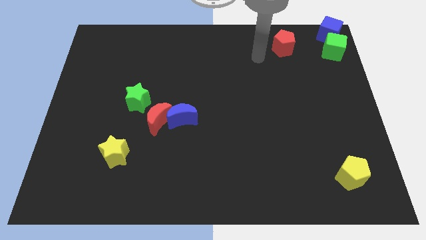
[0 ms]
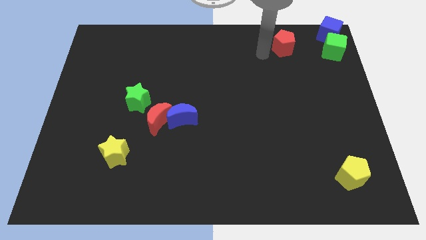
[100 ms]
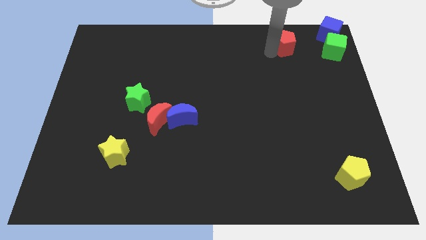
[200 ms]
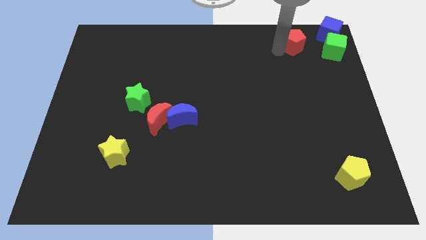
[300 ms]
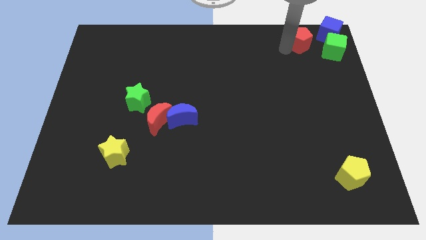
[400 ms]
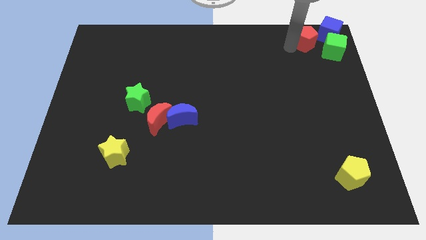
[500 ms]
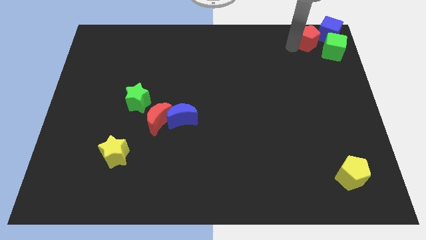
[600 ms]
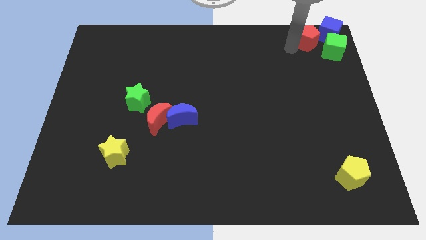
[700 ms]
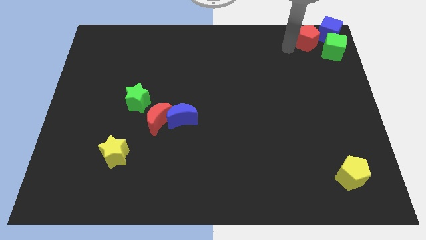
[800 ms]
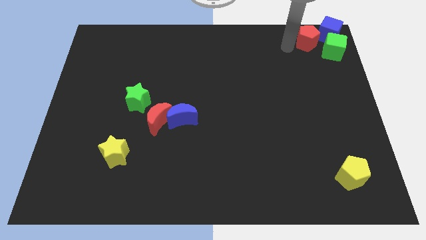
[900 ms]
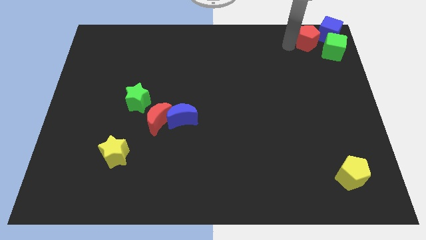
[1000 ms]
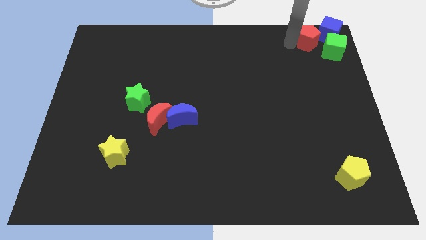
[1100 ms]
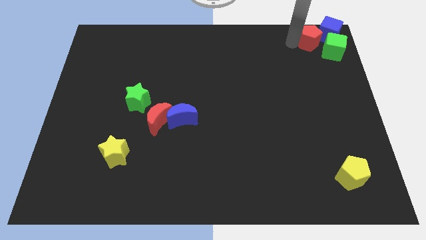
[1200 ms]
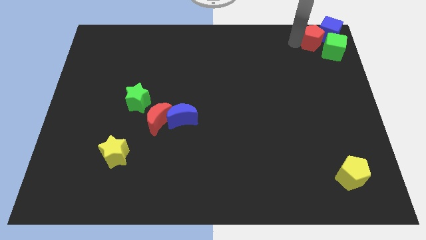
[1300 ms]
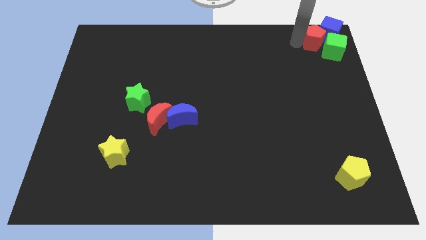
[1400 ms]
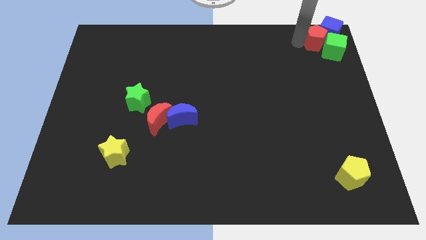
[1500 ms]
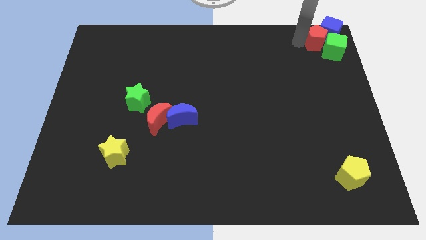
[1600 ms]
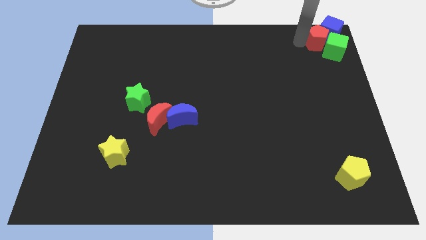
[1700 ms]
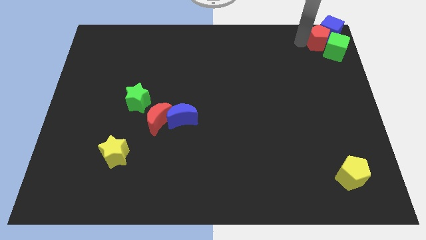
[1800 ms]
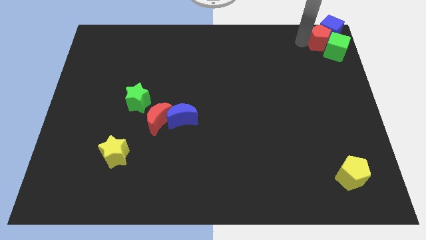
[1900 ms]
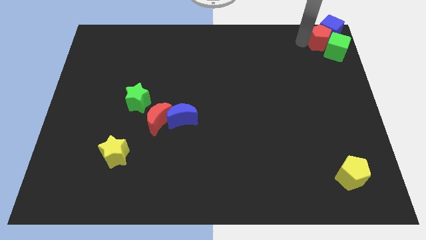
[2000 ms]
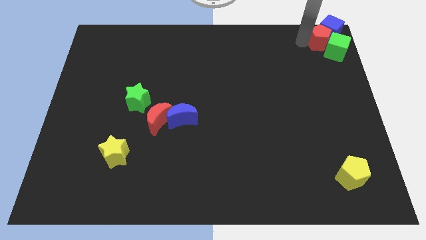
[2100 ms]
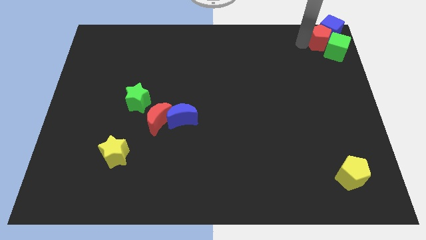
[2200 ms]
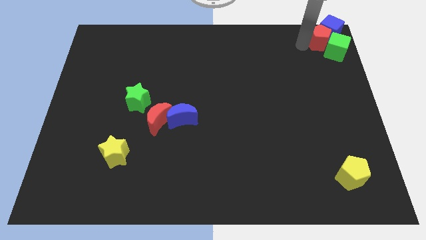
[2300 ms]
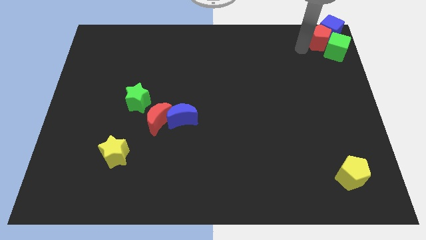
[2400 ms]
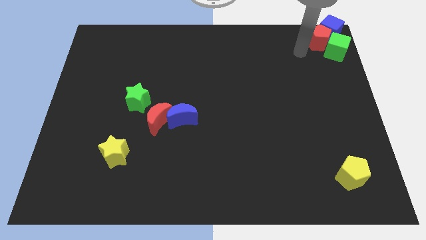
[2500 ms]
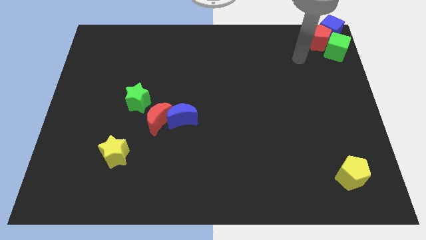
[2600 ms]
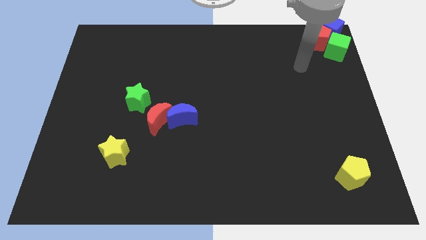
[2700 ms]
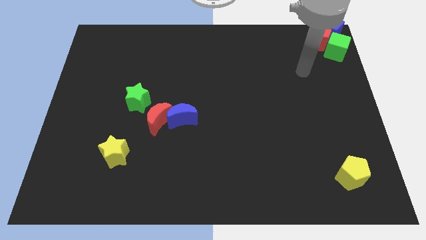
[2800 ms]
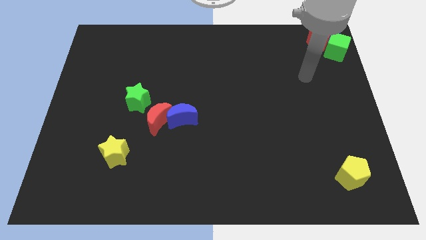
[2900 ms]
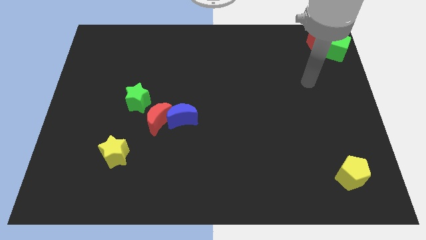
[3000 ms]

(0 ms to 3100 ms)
move red pentagon into the green cube

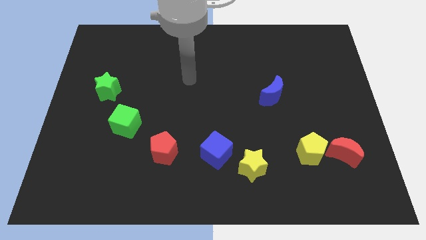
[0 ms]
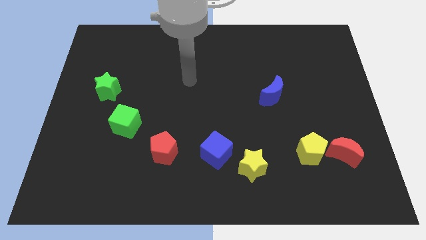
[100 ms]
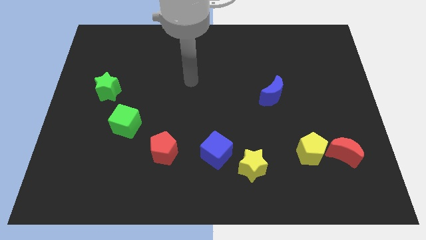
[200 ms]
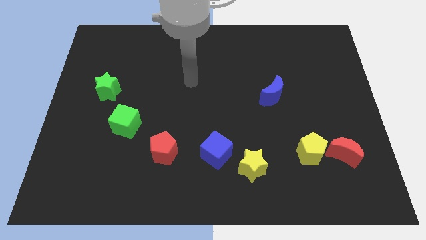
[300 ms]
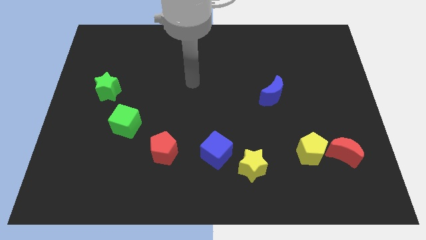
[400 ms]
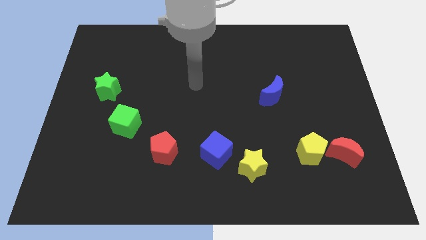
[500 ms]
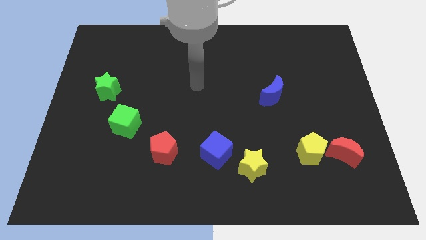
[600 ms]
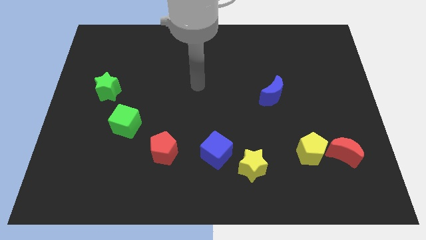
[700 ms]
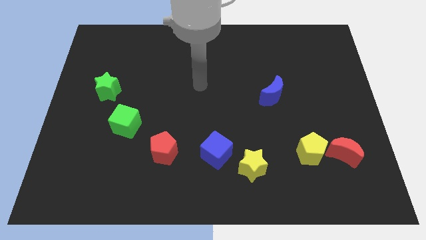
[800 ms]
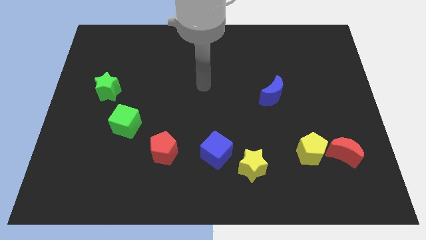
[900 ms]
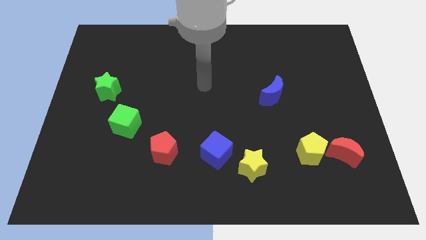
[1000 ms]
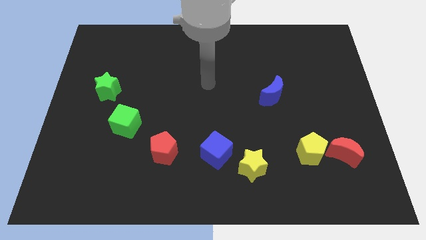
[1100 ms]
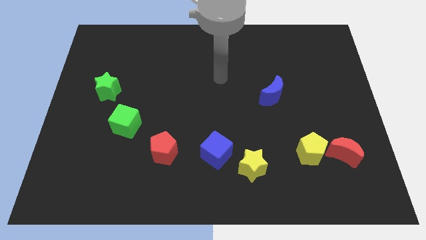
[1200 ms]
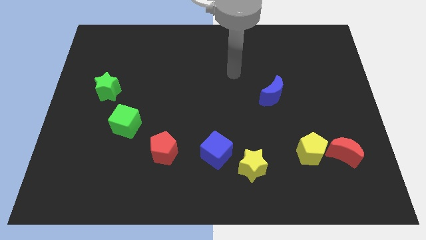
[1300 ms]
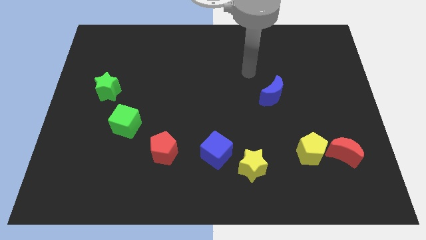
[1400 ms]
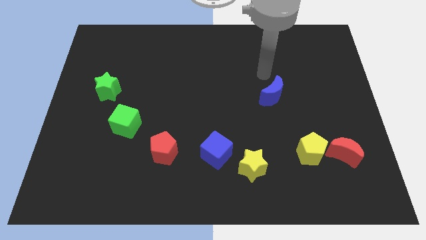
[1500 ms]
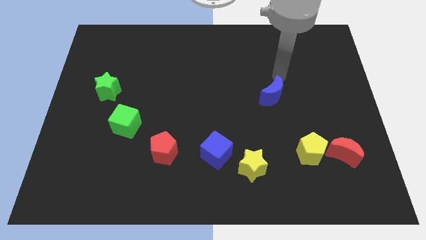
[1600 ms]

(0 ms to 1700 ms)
drag the pointer to the top of the blue moon

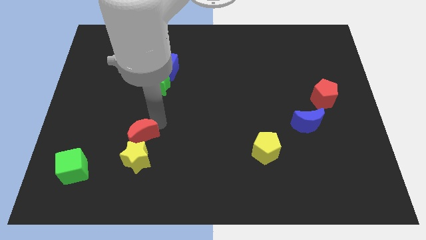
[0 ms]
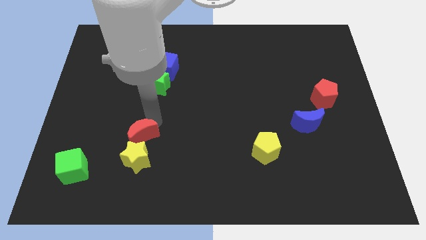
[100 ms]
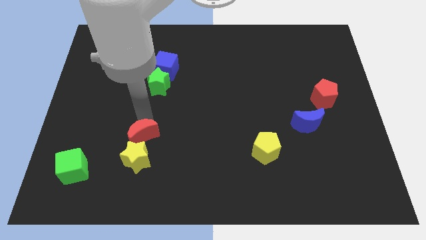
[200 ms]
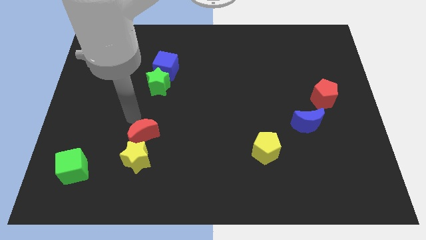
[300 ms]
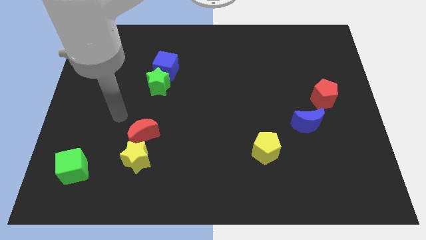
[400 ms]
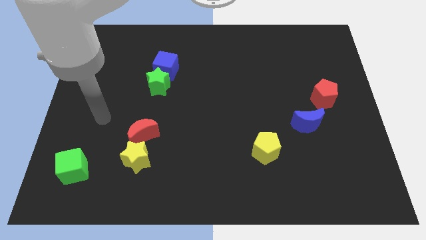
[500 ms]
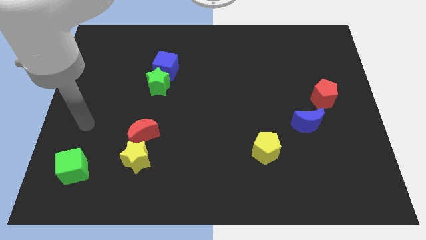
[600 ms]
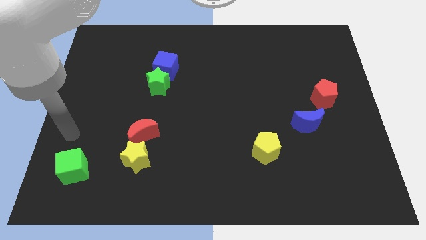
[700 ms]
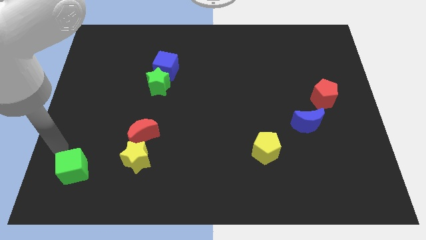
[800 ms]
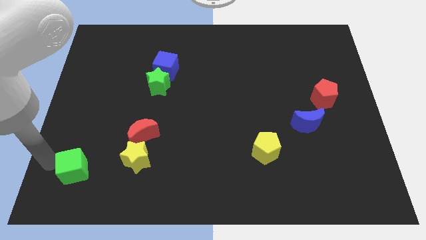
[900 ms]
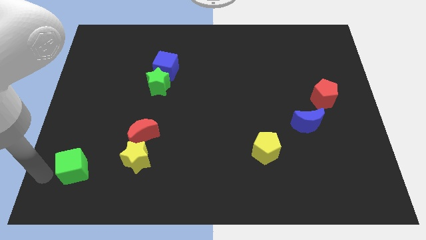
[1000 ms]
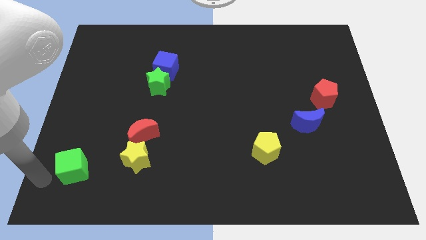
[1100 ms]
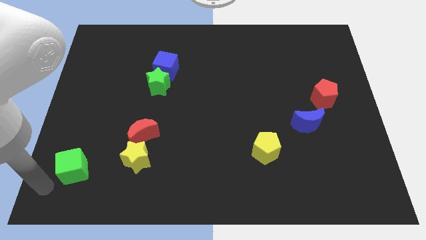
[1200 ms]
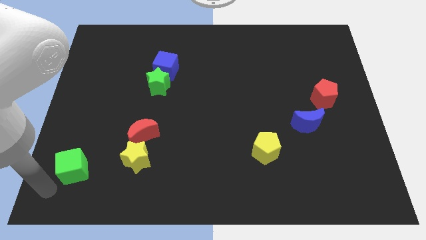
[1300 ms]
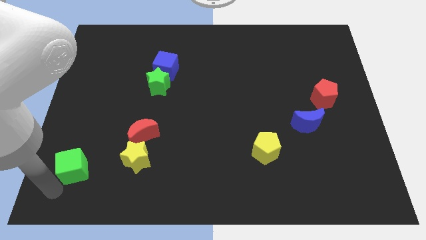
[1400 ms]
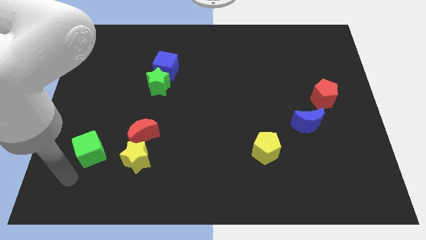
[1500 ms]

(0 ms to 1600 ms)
move the arm towards the bottom left of the green cube

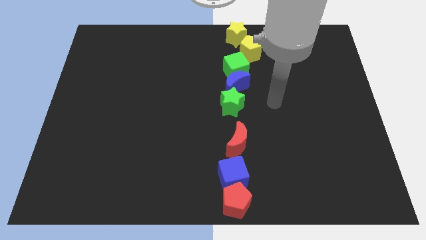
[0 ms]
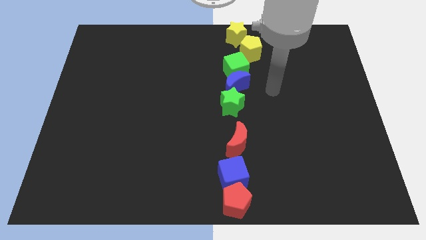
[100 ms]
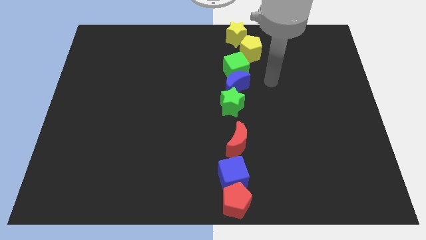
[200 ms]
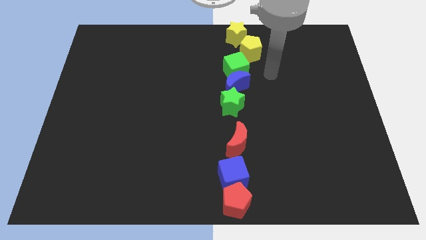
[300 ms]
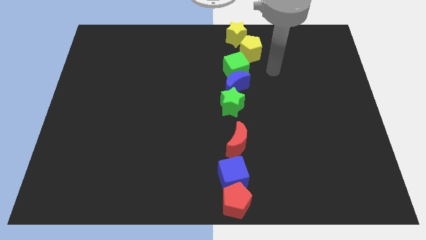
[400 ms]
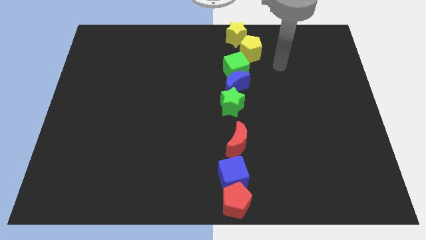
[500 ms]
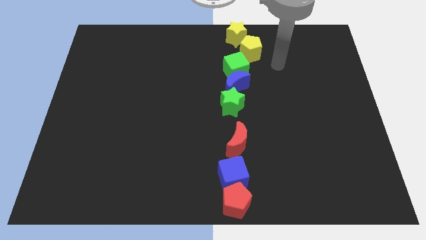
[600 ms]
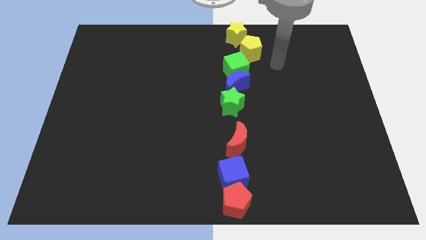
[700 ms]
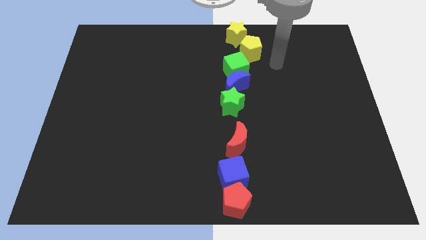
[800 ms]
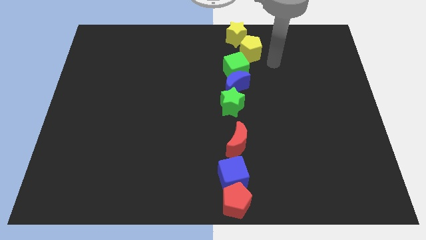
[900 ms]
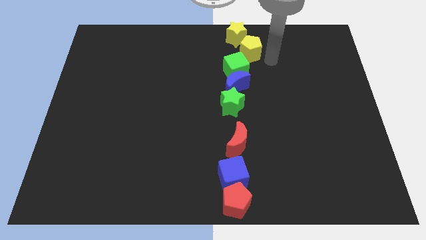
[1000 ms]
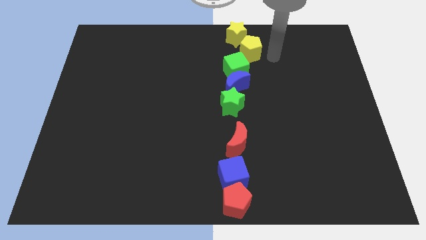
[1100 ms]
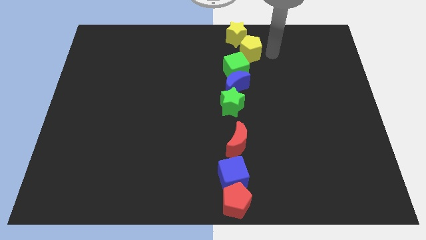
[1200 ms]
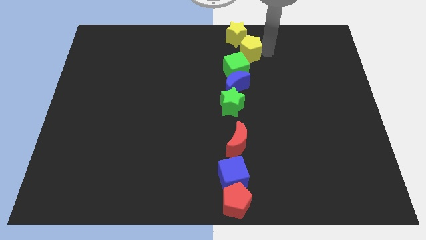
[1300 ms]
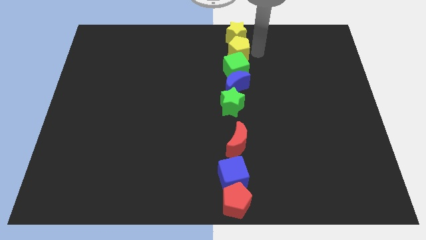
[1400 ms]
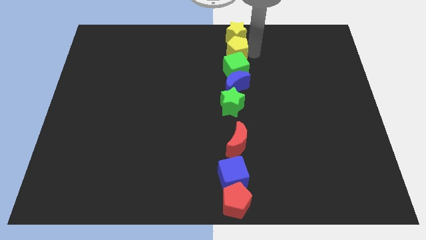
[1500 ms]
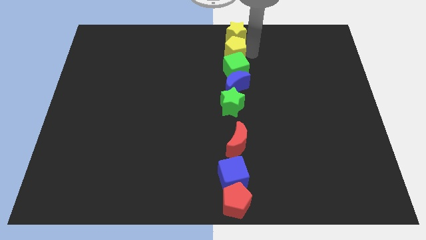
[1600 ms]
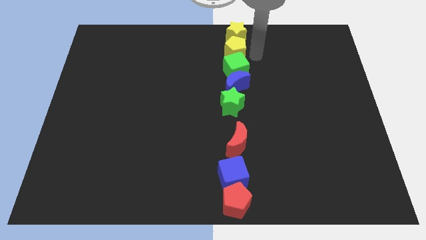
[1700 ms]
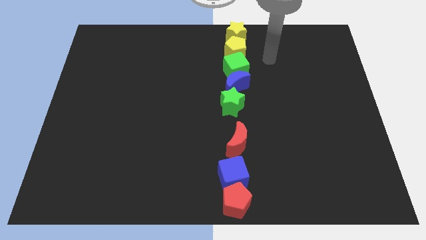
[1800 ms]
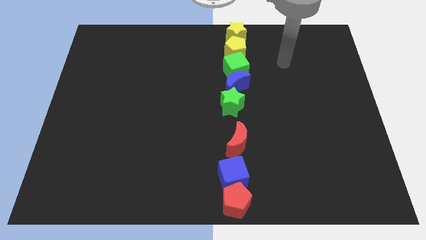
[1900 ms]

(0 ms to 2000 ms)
place the yellow pentagon in between yellow star and green cube

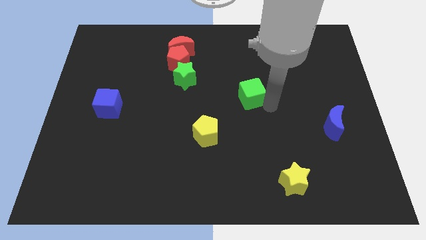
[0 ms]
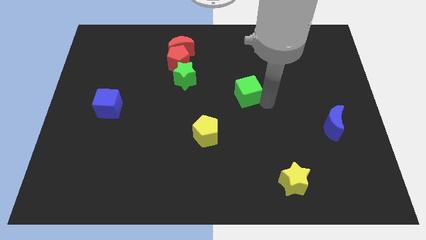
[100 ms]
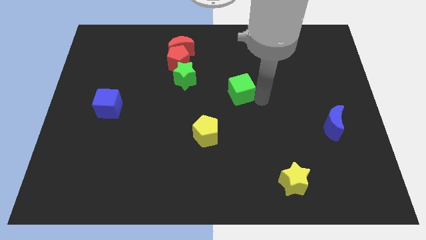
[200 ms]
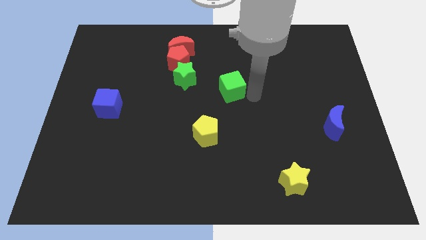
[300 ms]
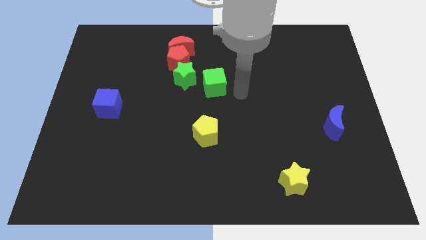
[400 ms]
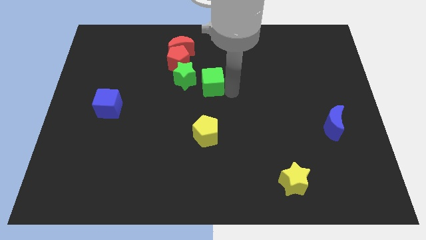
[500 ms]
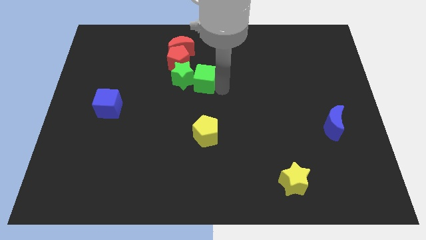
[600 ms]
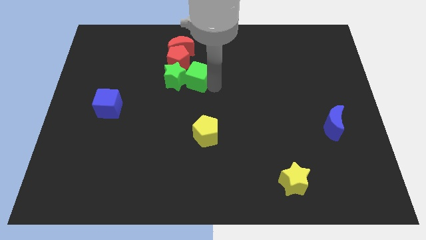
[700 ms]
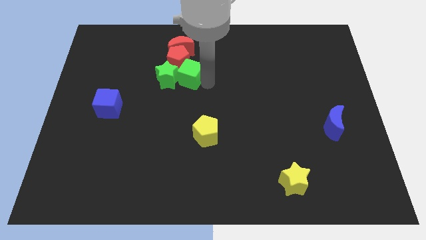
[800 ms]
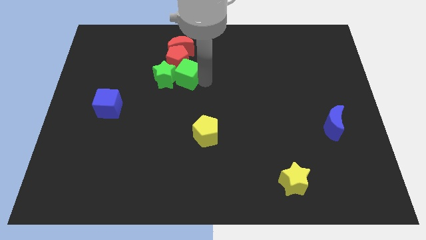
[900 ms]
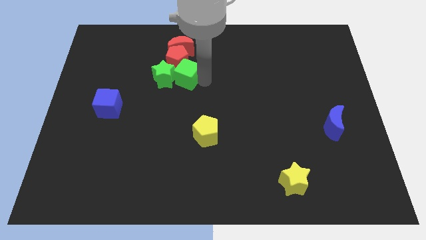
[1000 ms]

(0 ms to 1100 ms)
move the green cube to the right of the green star
